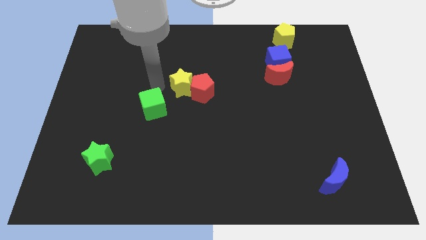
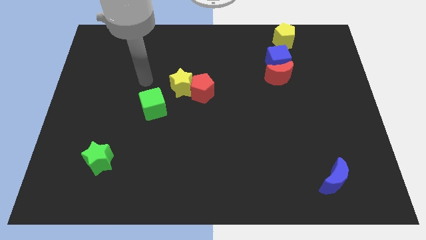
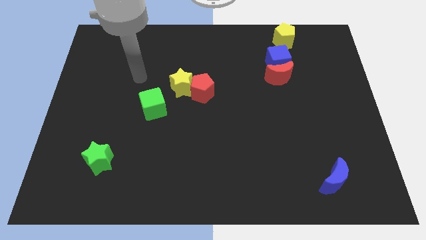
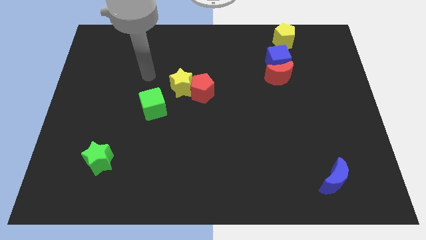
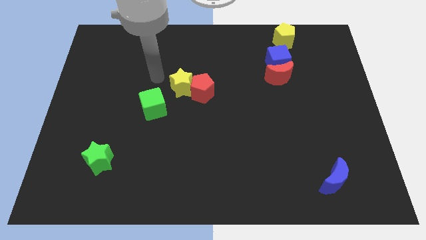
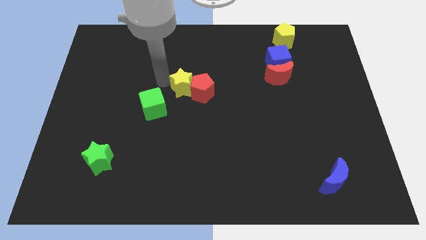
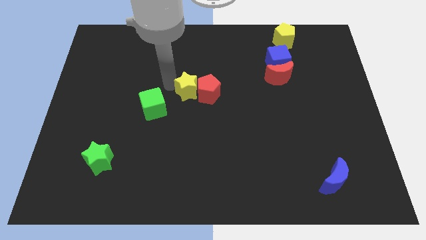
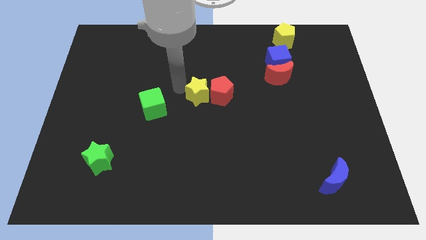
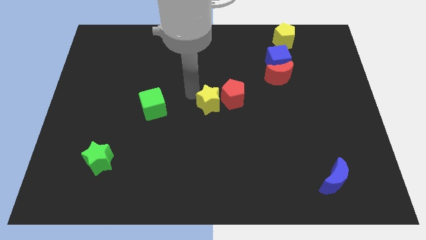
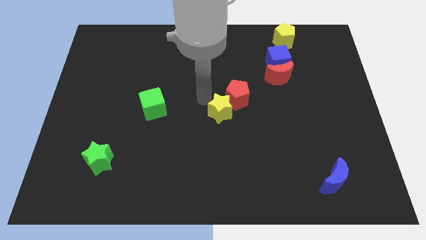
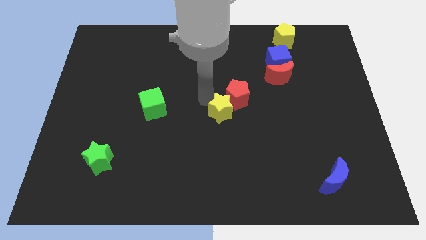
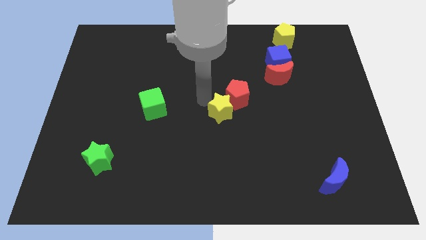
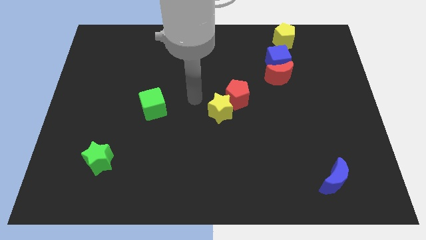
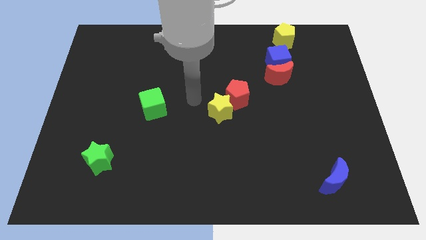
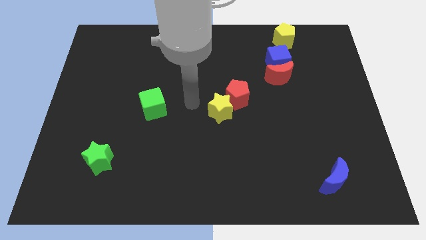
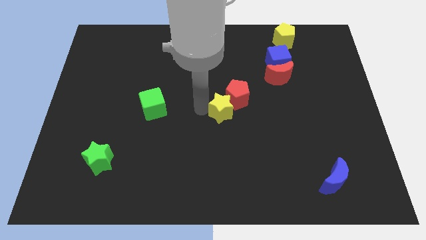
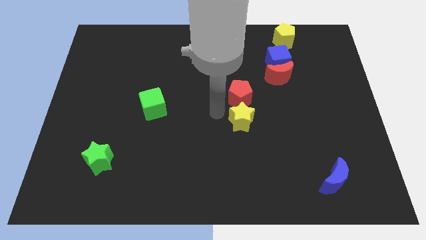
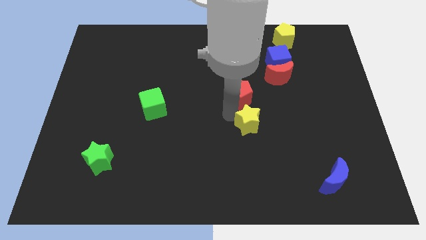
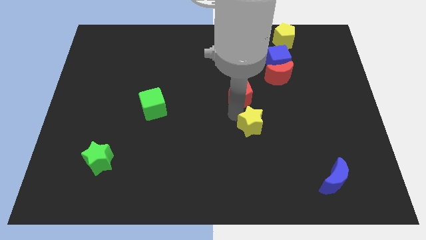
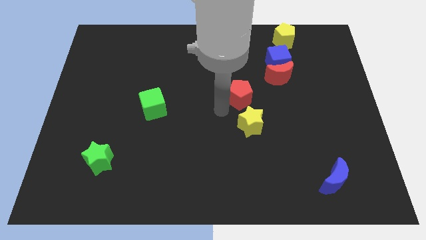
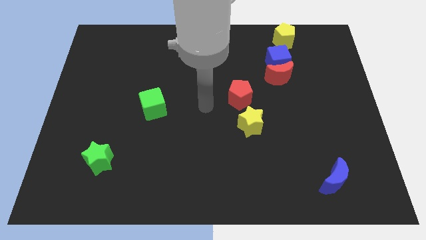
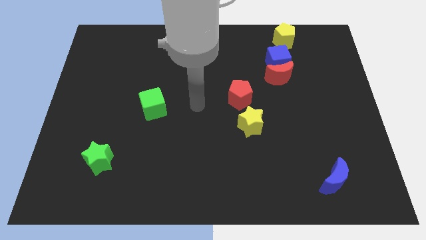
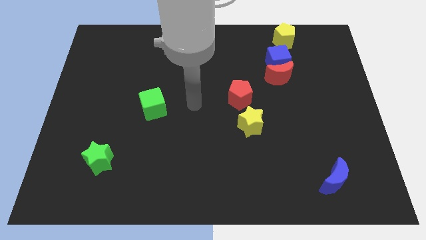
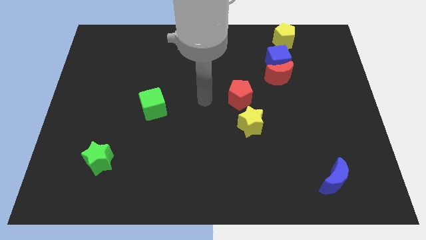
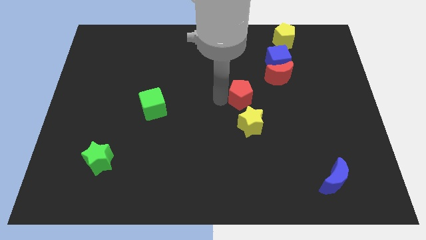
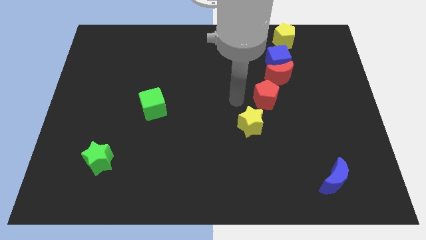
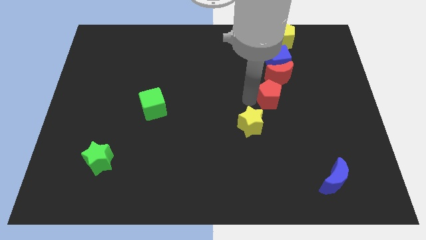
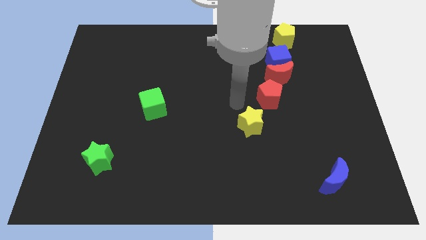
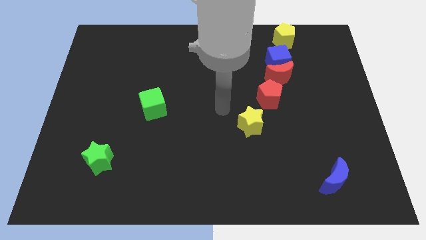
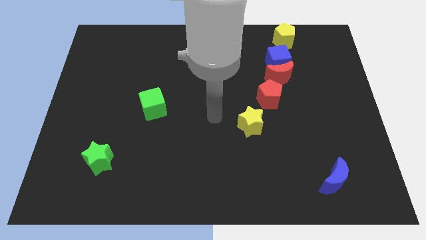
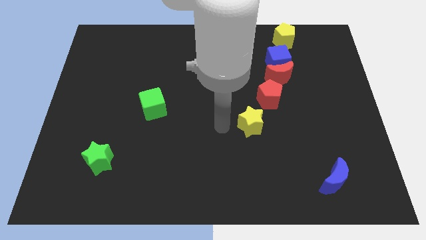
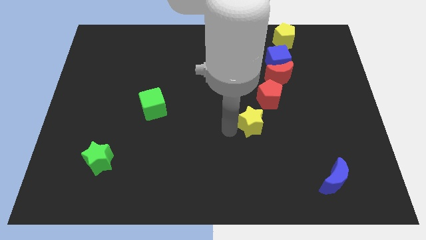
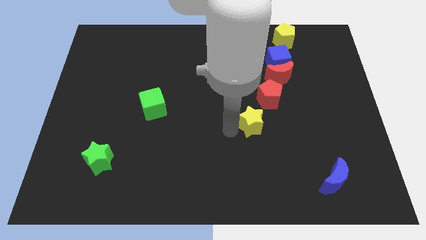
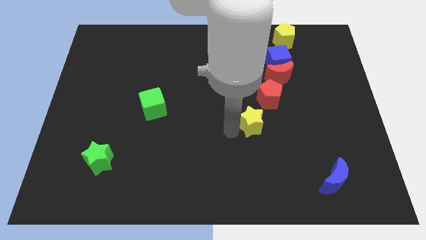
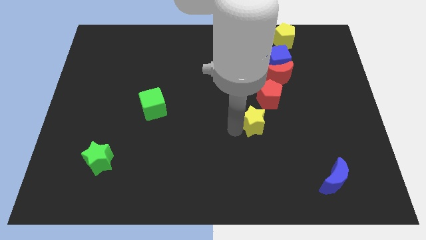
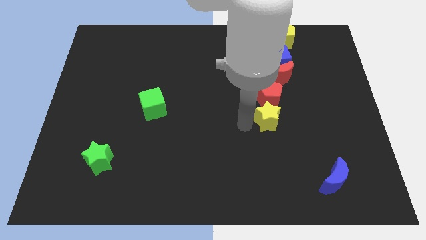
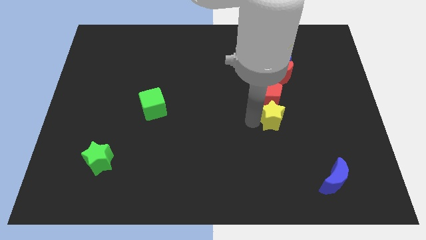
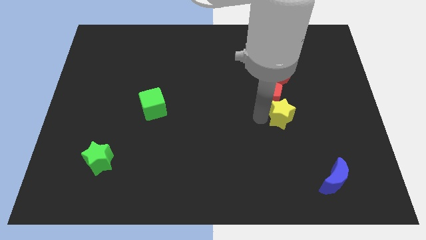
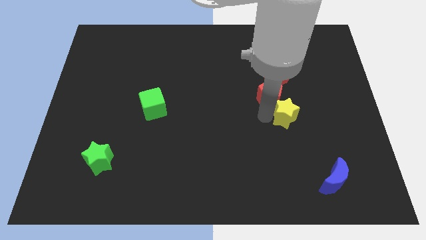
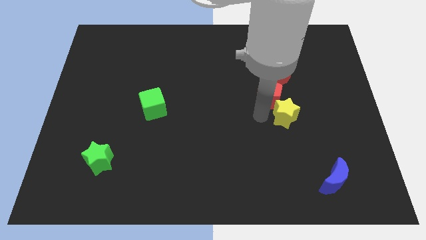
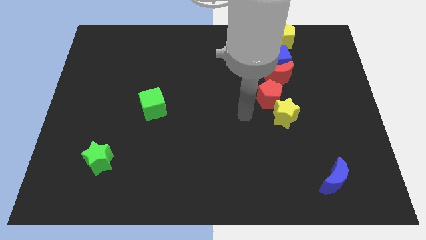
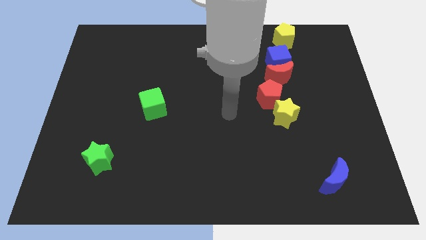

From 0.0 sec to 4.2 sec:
push the red pentagon and yellow star to the right side of the board

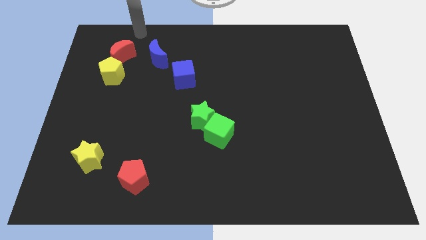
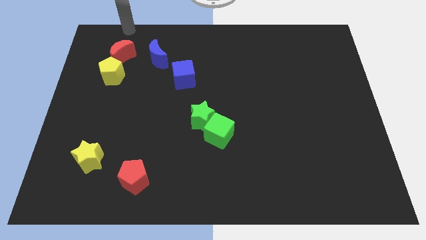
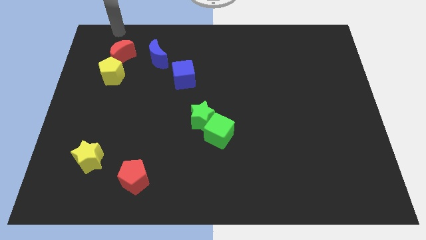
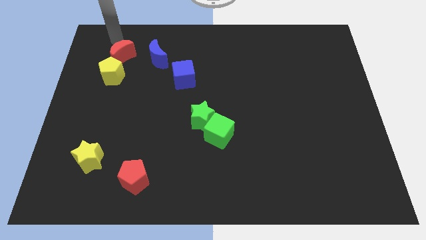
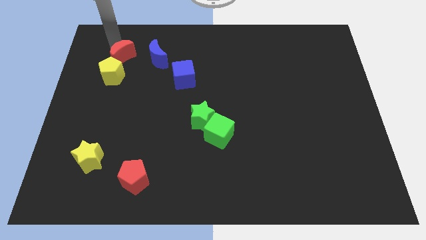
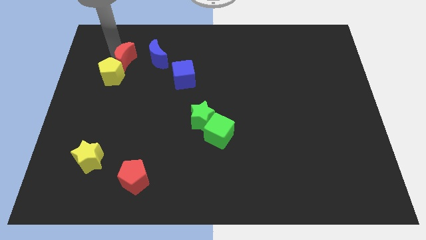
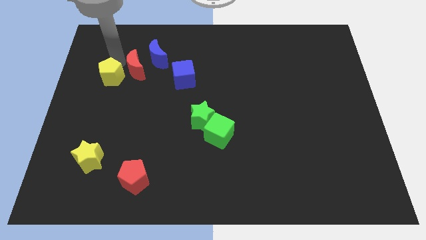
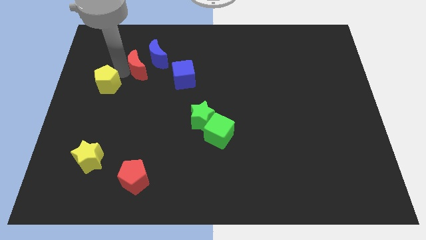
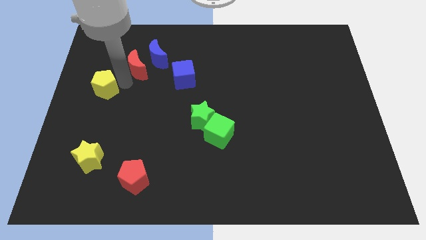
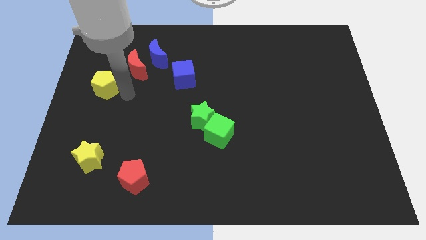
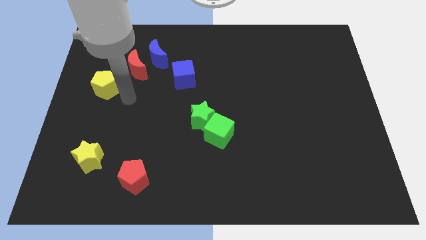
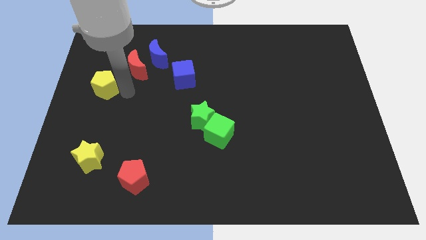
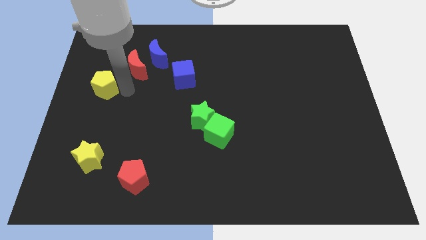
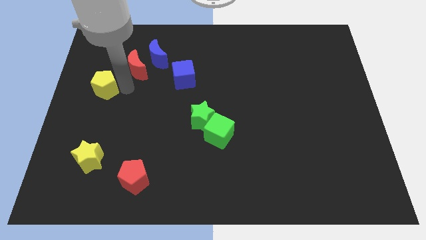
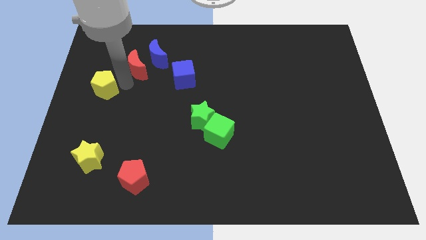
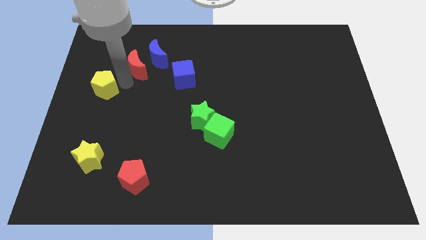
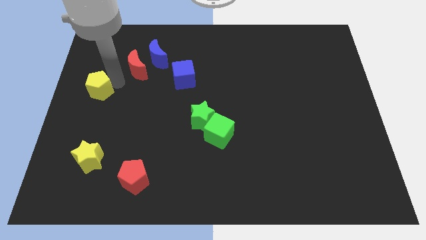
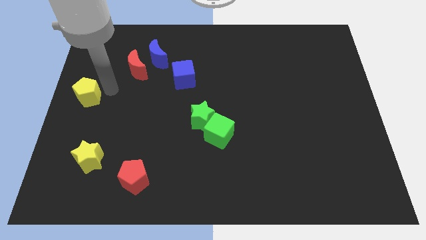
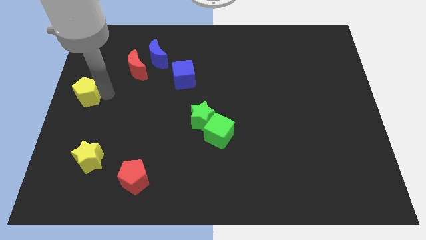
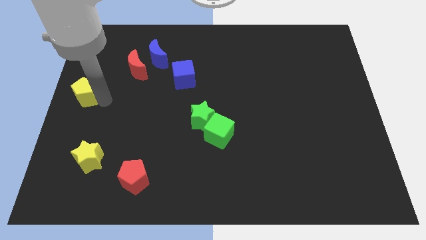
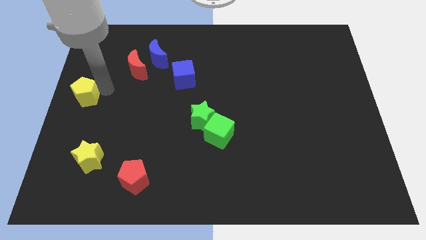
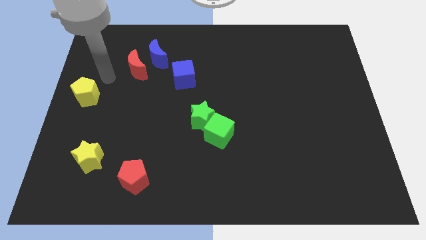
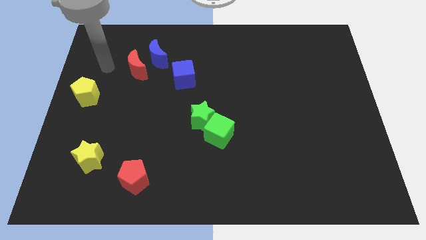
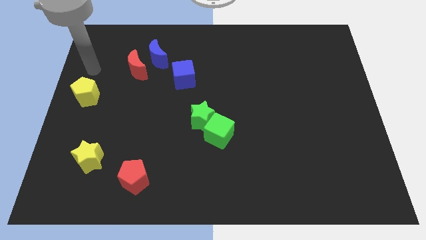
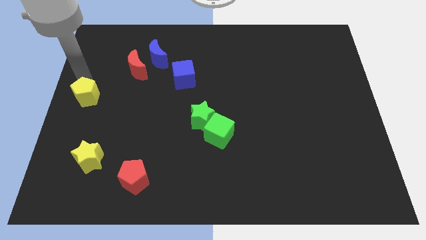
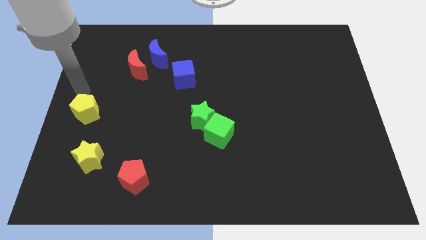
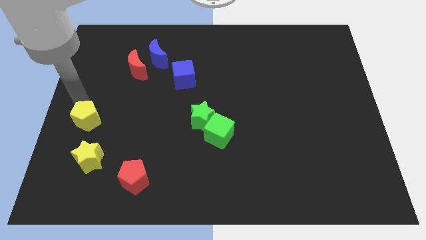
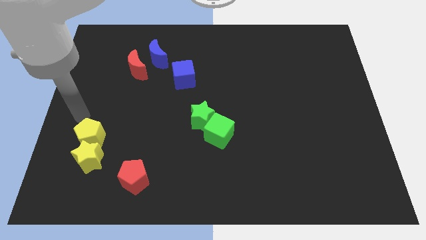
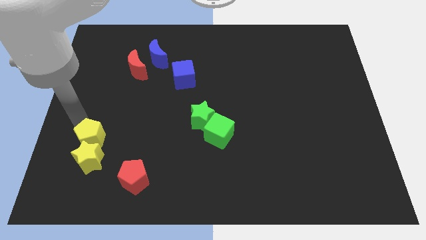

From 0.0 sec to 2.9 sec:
push yellow pentagon towards yellow star

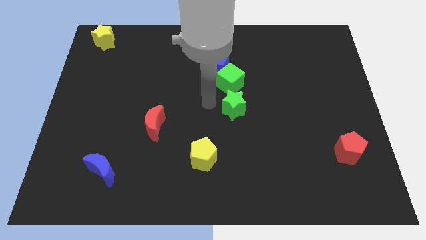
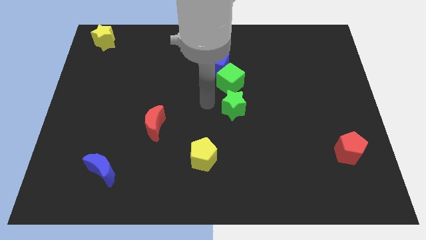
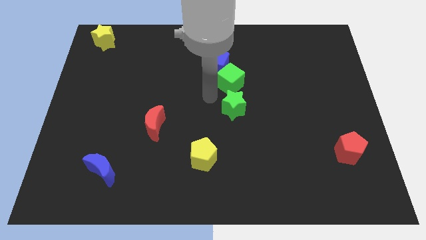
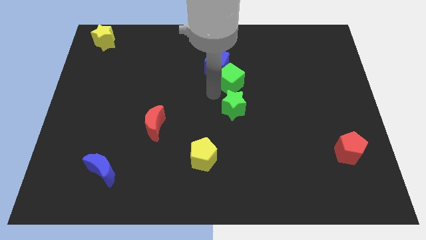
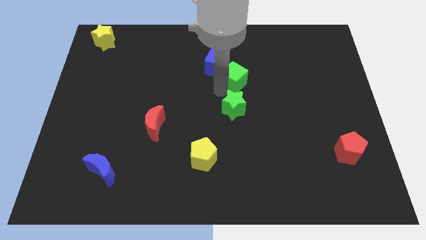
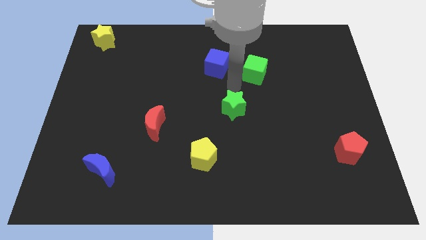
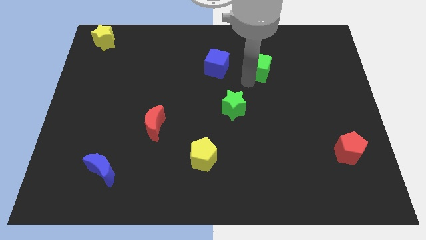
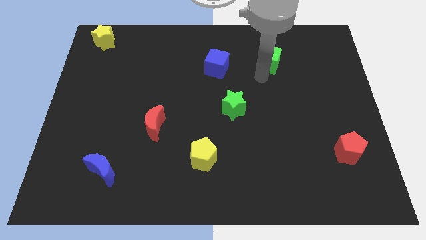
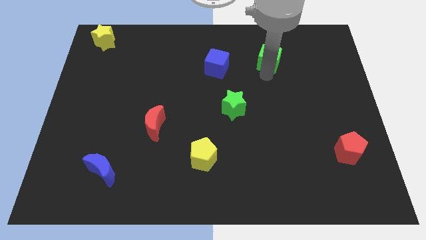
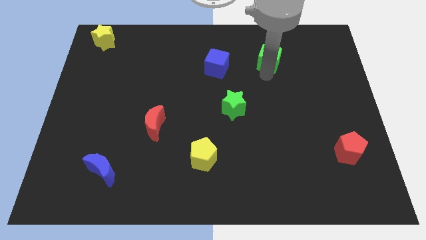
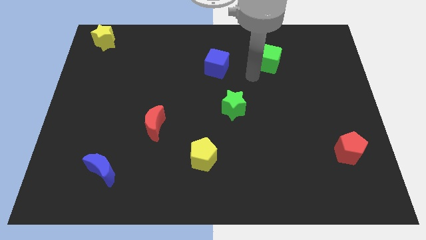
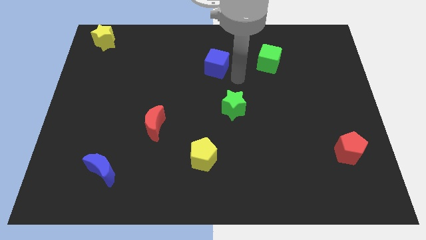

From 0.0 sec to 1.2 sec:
place green cube to the right of blue cube

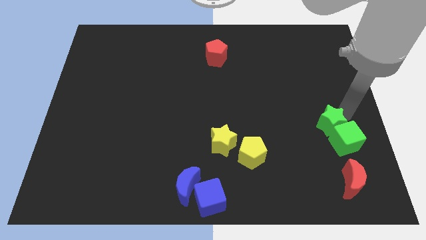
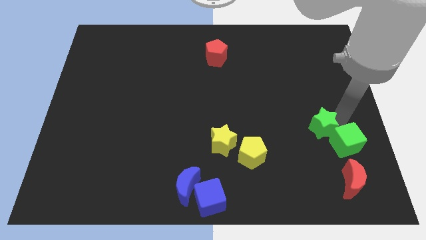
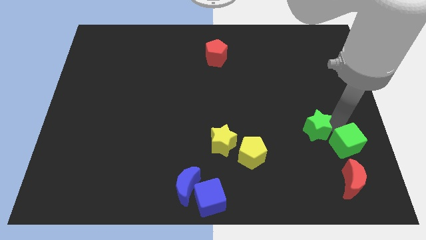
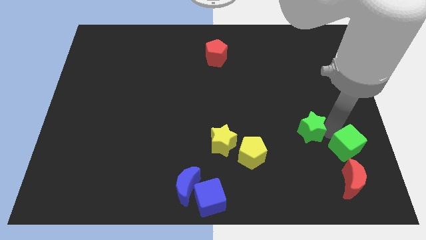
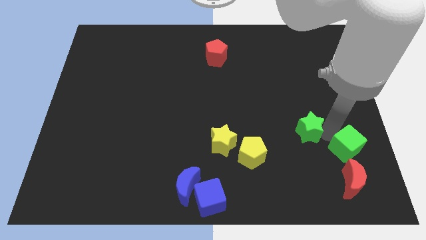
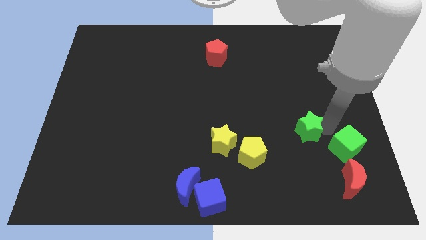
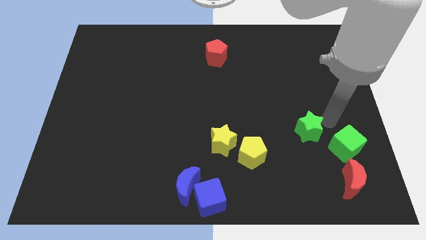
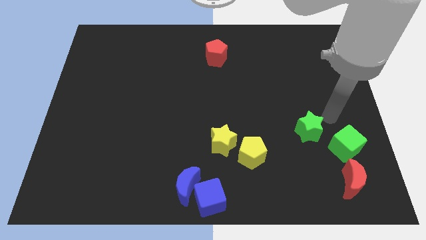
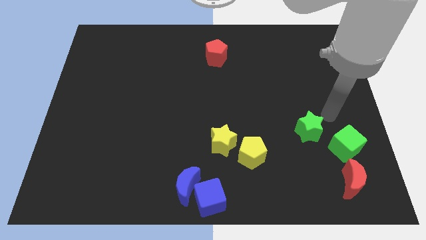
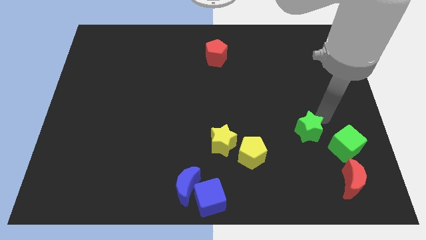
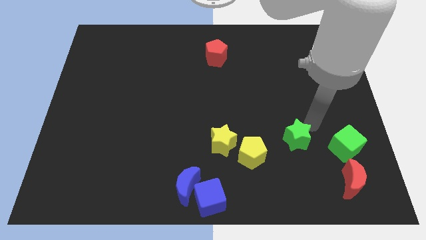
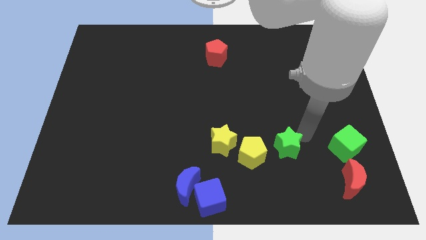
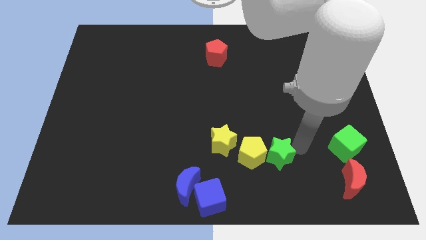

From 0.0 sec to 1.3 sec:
separate green star from green cube
